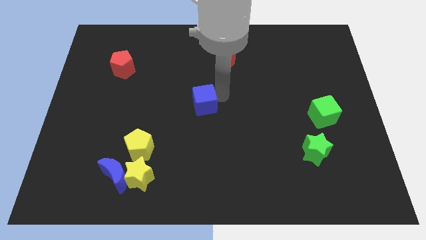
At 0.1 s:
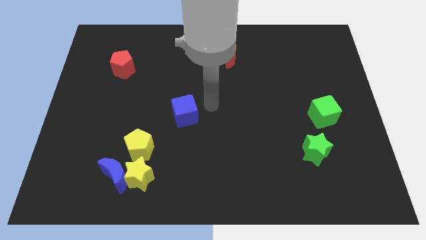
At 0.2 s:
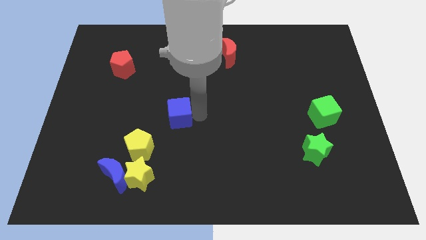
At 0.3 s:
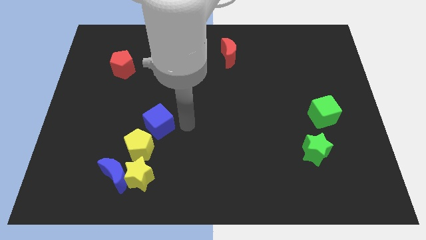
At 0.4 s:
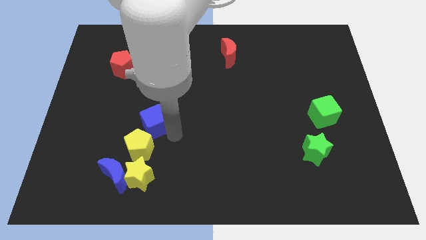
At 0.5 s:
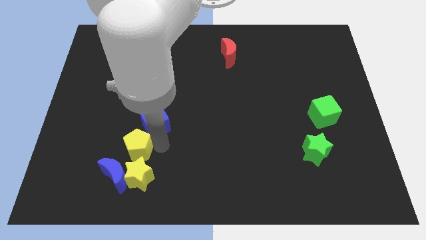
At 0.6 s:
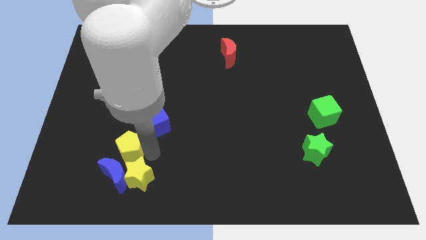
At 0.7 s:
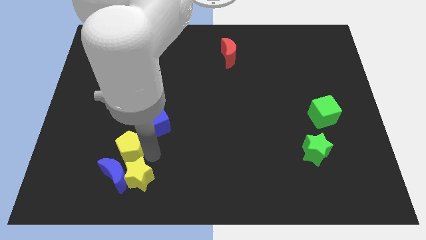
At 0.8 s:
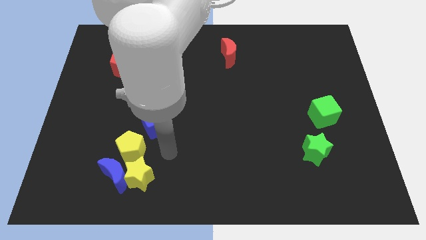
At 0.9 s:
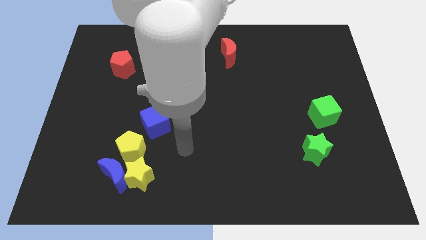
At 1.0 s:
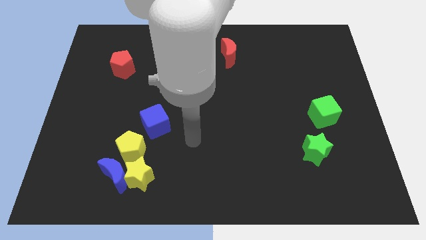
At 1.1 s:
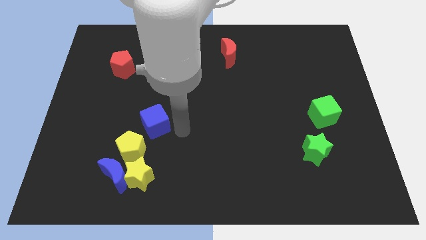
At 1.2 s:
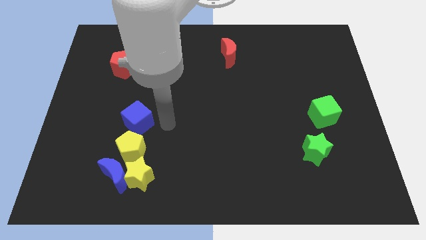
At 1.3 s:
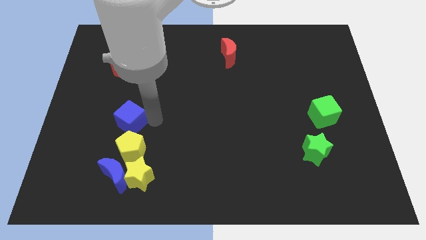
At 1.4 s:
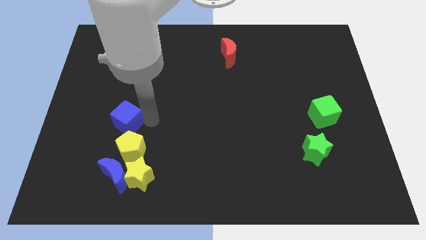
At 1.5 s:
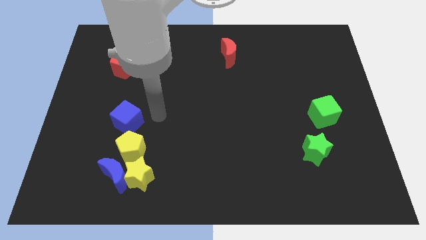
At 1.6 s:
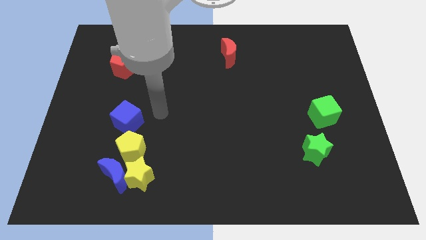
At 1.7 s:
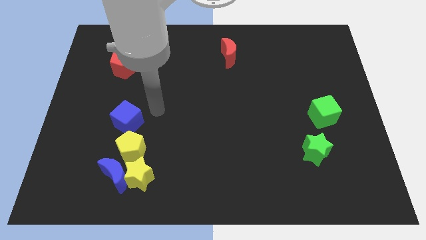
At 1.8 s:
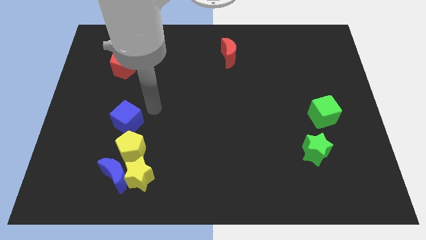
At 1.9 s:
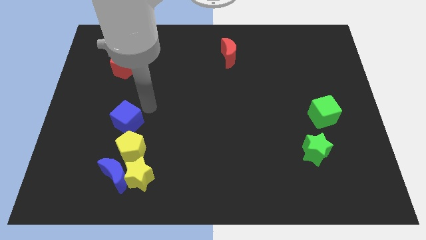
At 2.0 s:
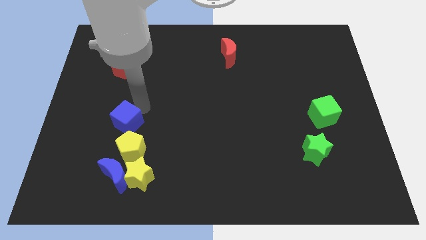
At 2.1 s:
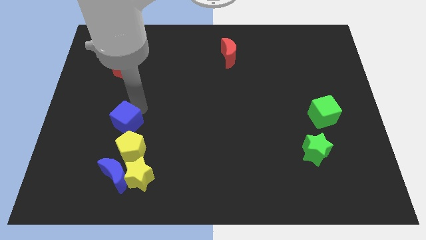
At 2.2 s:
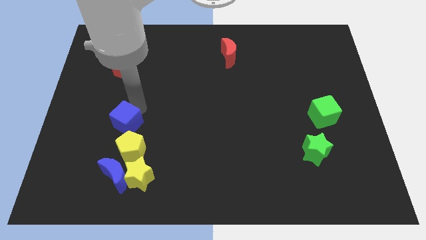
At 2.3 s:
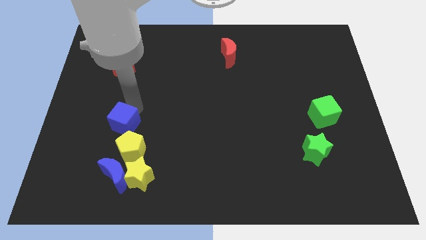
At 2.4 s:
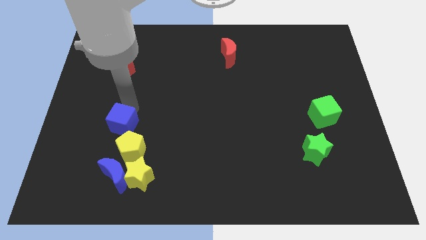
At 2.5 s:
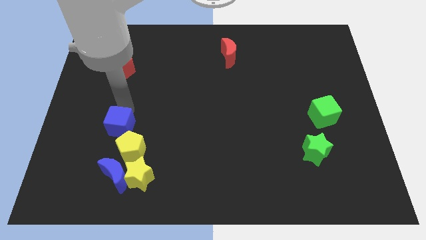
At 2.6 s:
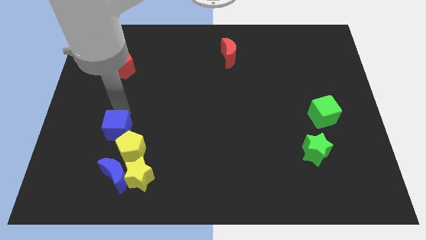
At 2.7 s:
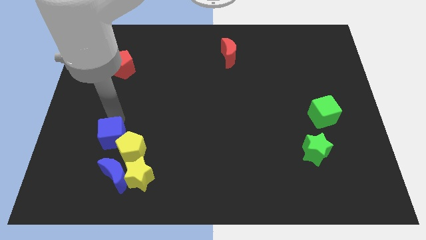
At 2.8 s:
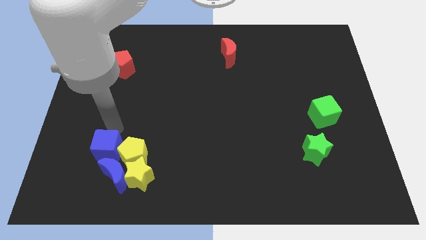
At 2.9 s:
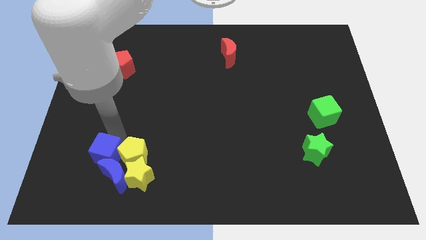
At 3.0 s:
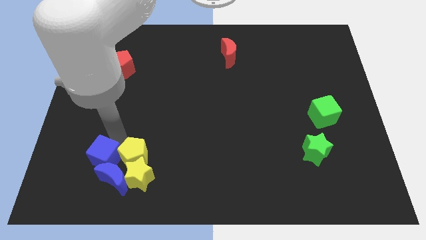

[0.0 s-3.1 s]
move the blue cube to the left of the yellow pentagon

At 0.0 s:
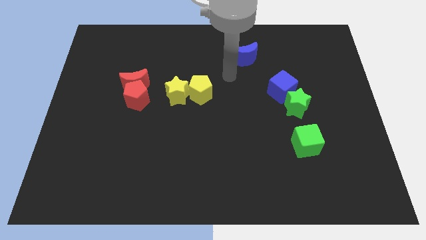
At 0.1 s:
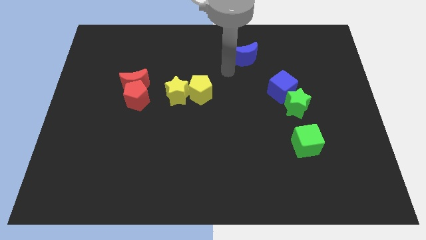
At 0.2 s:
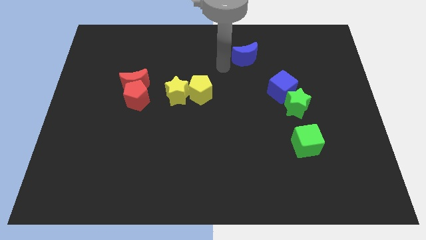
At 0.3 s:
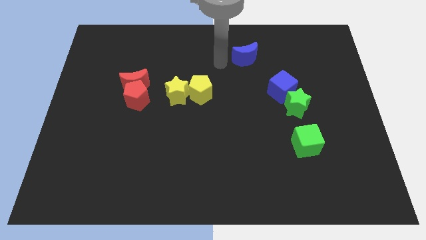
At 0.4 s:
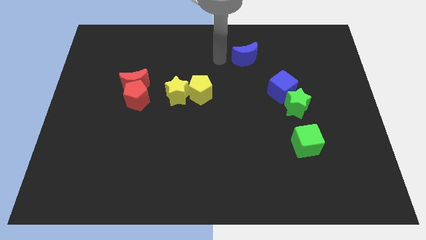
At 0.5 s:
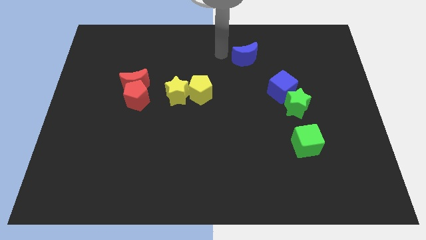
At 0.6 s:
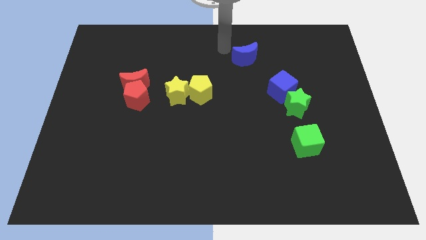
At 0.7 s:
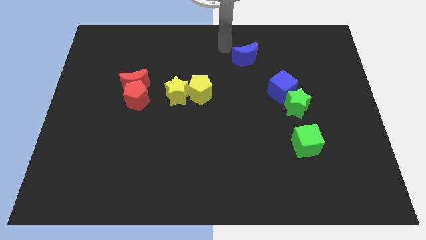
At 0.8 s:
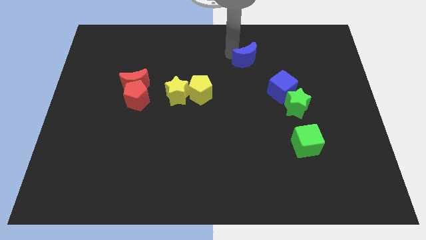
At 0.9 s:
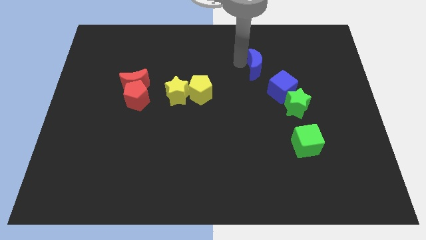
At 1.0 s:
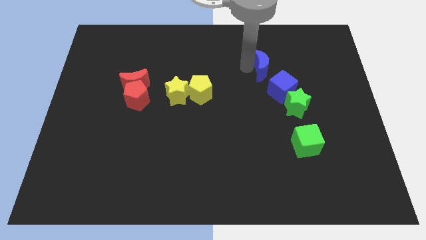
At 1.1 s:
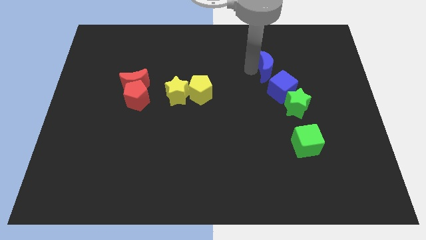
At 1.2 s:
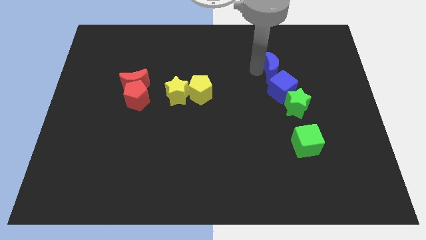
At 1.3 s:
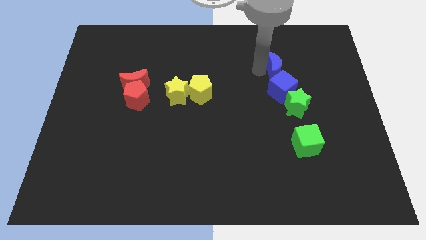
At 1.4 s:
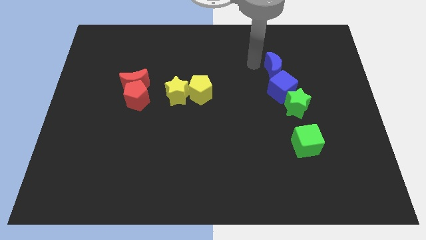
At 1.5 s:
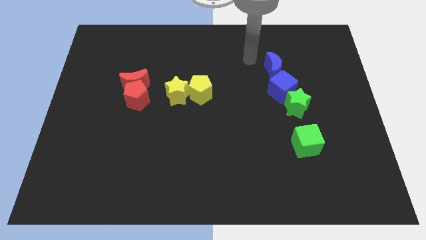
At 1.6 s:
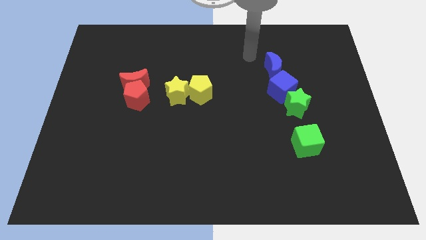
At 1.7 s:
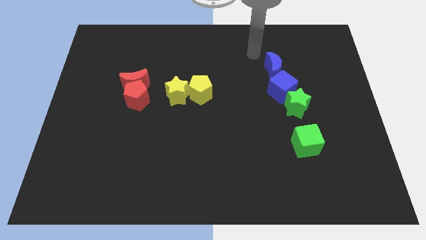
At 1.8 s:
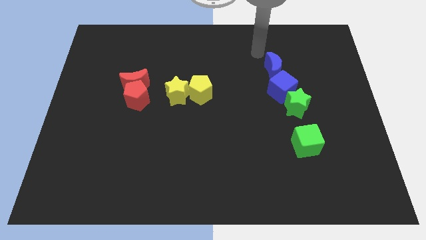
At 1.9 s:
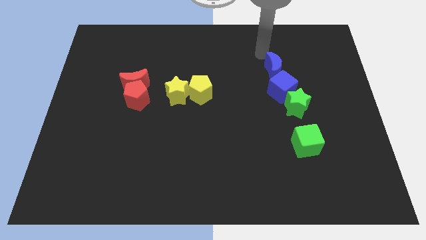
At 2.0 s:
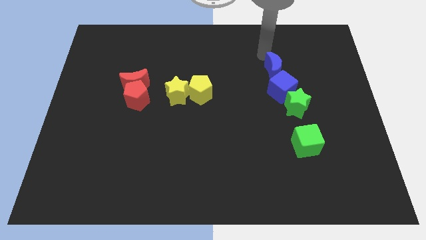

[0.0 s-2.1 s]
place blue moon above the blue cube

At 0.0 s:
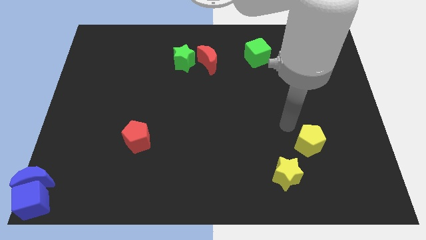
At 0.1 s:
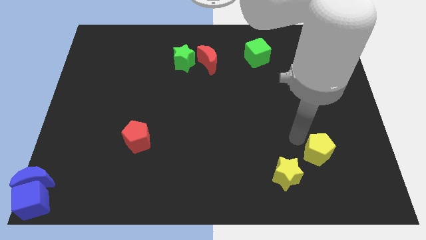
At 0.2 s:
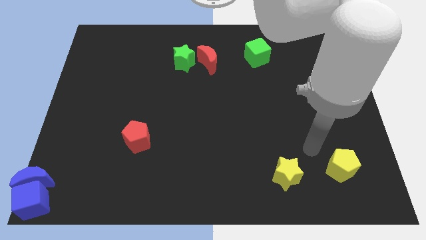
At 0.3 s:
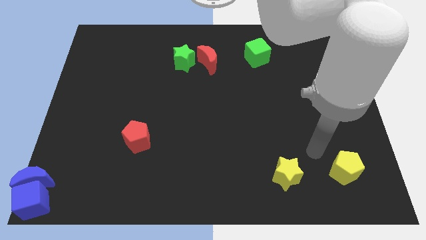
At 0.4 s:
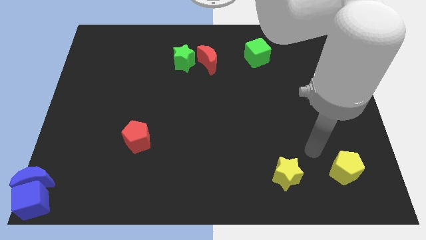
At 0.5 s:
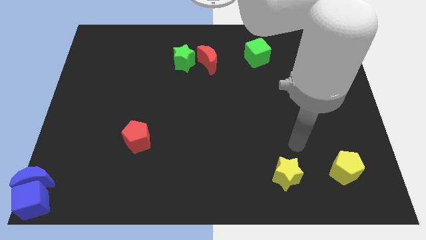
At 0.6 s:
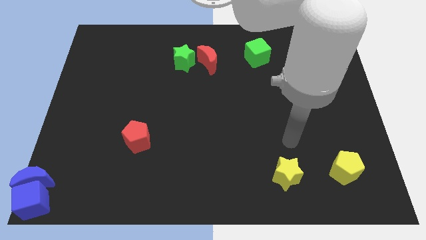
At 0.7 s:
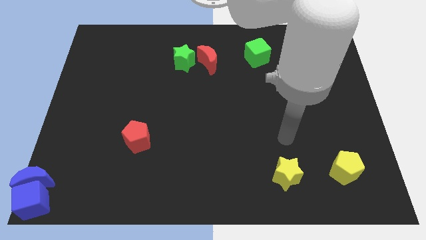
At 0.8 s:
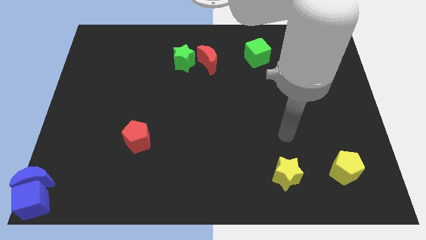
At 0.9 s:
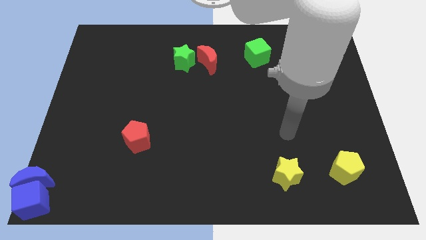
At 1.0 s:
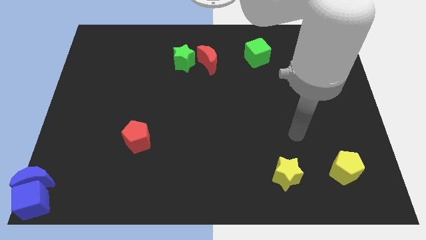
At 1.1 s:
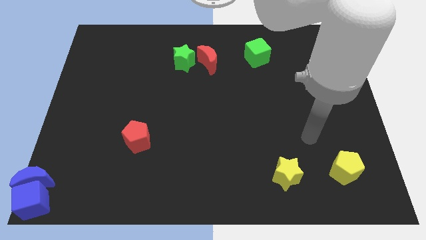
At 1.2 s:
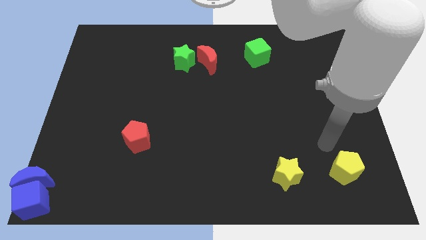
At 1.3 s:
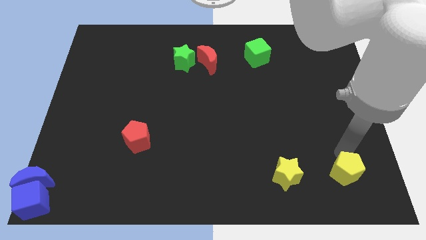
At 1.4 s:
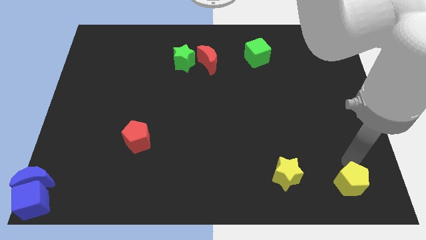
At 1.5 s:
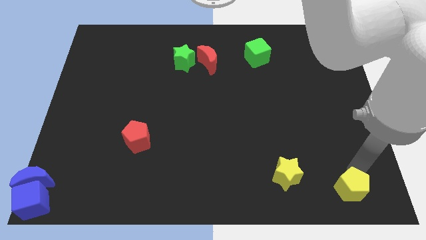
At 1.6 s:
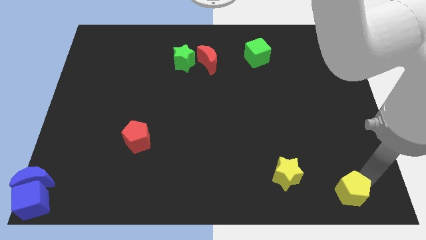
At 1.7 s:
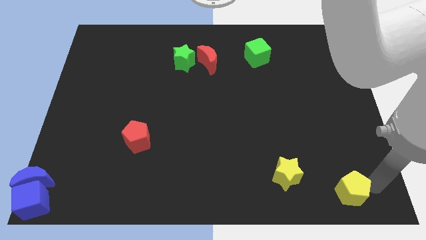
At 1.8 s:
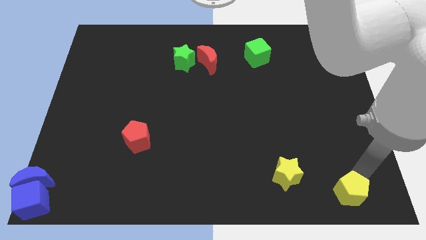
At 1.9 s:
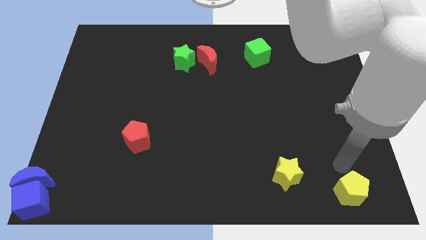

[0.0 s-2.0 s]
move the yellow pentagon to the bottom right side of the board

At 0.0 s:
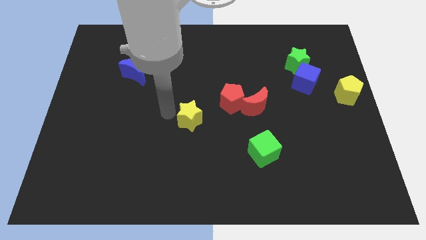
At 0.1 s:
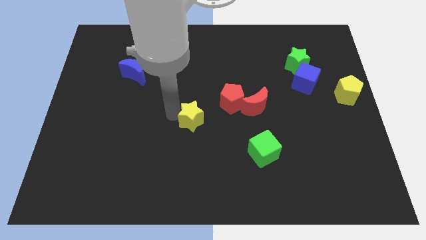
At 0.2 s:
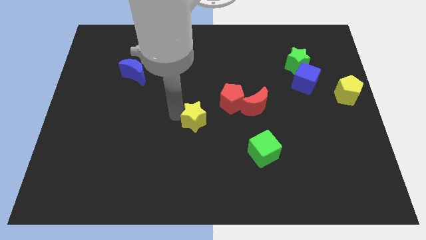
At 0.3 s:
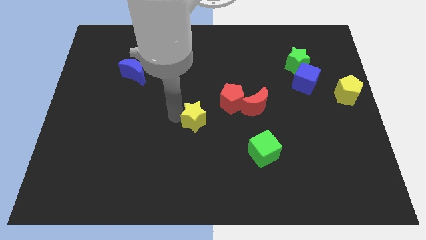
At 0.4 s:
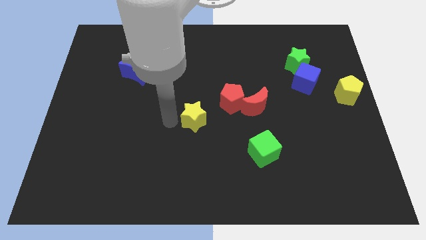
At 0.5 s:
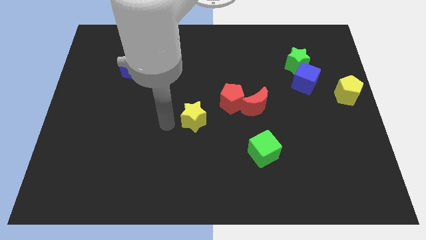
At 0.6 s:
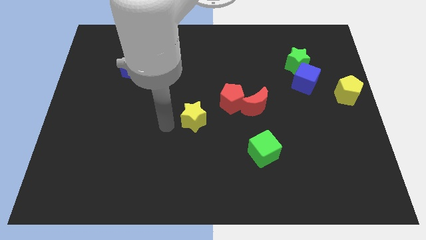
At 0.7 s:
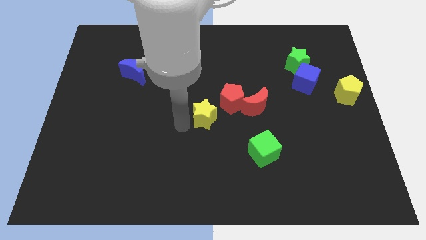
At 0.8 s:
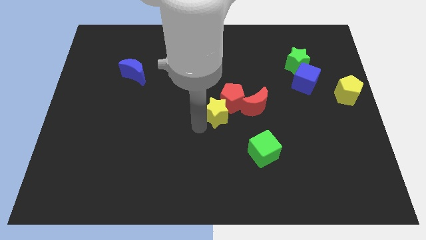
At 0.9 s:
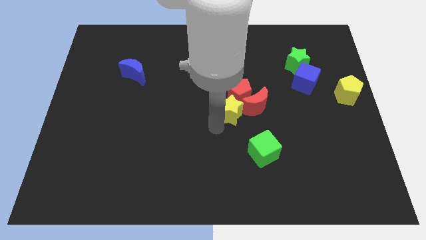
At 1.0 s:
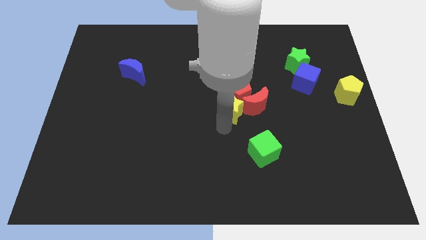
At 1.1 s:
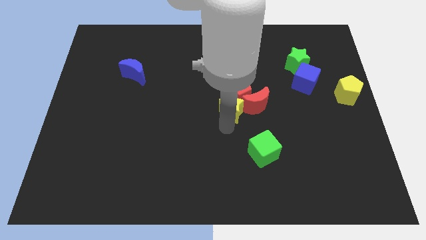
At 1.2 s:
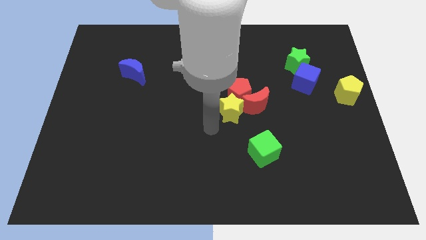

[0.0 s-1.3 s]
push the yellow star into the red pentagon

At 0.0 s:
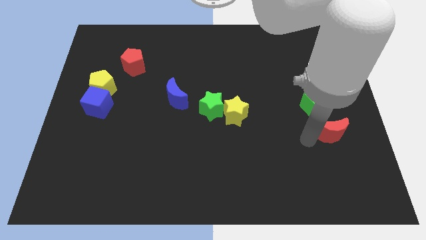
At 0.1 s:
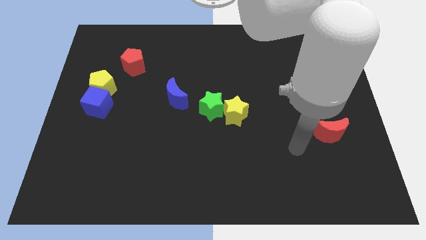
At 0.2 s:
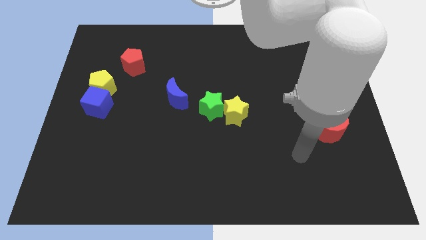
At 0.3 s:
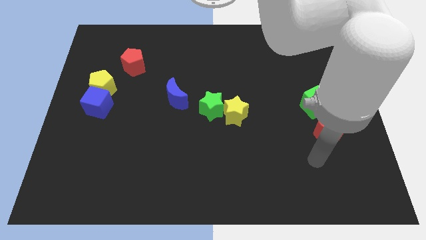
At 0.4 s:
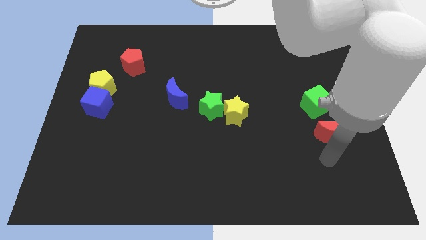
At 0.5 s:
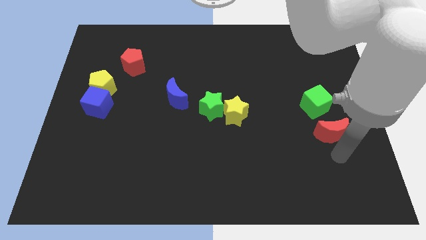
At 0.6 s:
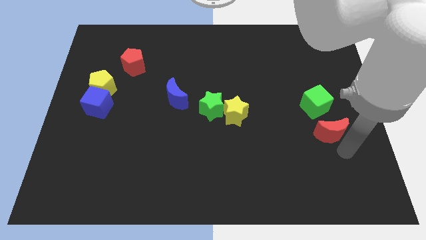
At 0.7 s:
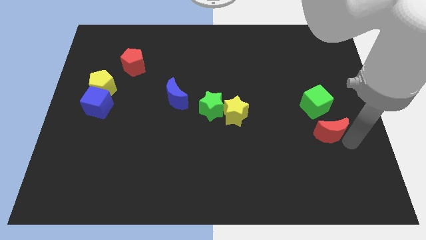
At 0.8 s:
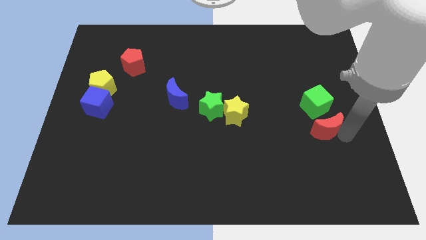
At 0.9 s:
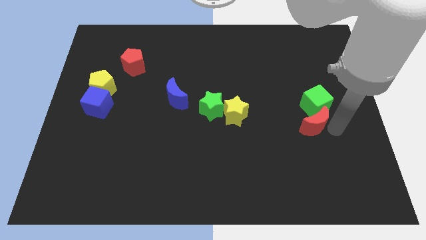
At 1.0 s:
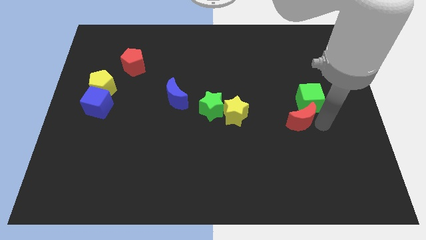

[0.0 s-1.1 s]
move the red crescent into the green cube
